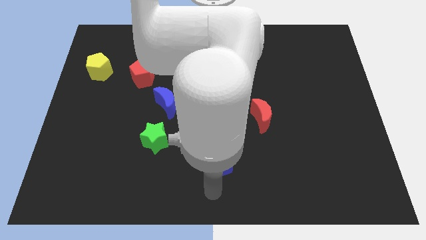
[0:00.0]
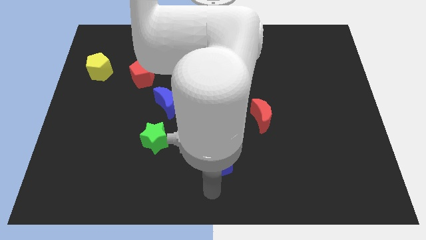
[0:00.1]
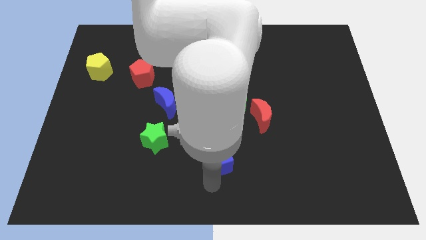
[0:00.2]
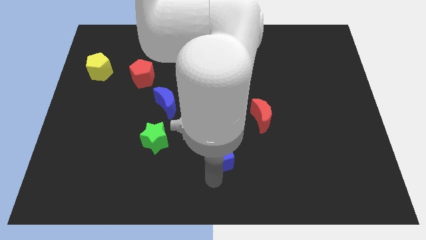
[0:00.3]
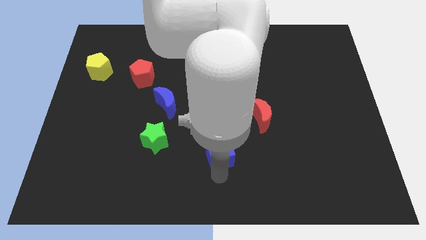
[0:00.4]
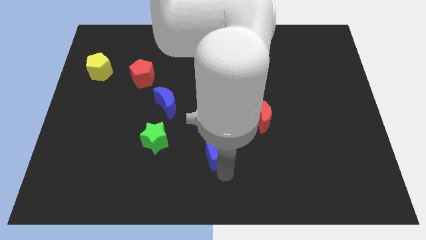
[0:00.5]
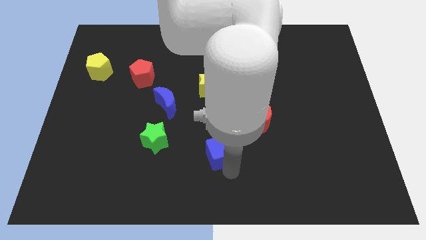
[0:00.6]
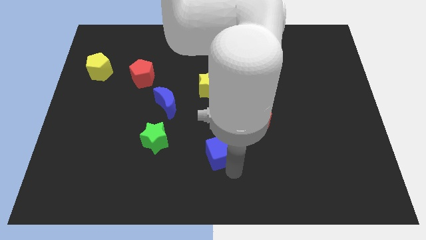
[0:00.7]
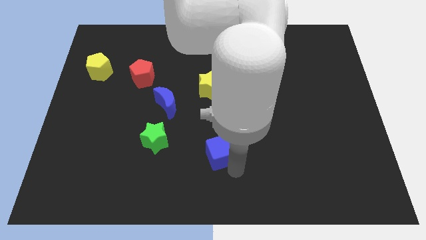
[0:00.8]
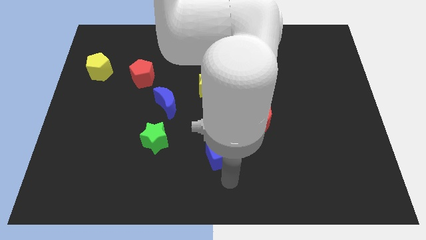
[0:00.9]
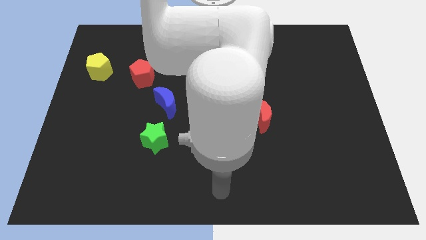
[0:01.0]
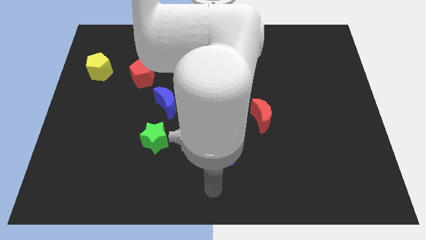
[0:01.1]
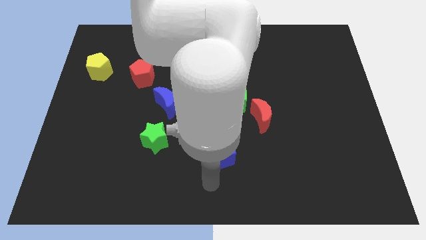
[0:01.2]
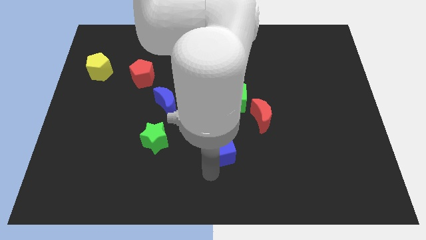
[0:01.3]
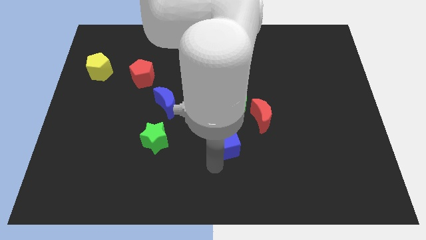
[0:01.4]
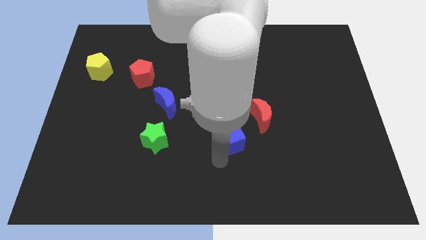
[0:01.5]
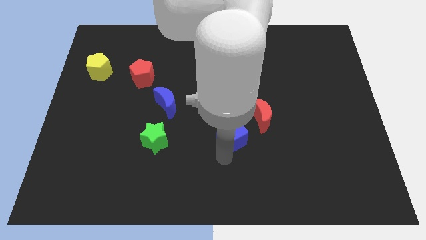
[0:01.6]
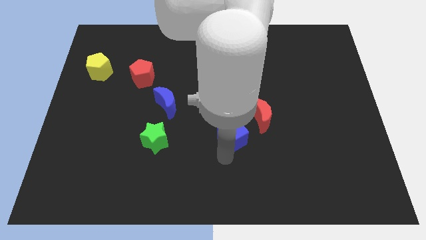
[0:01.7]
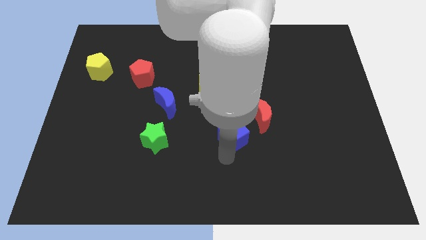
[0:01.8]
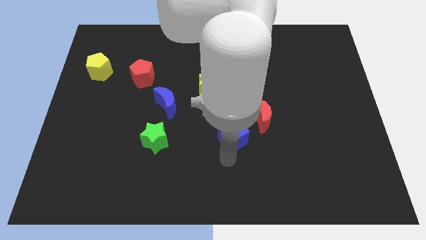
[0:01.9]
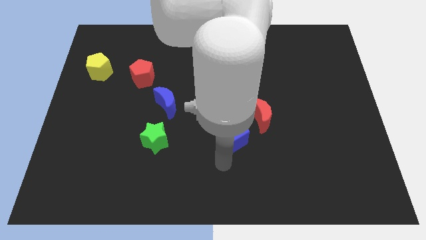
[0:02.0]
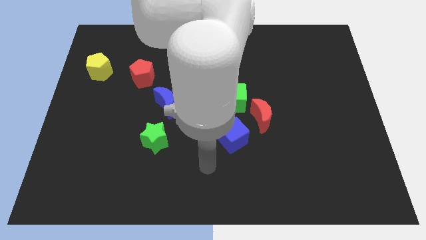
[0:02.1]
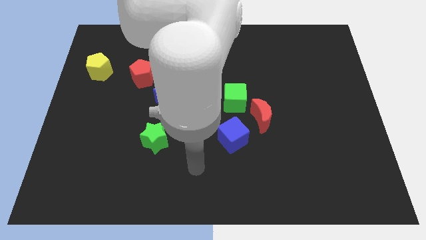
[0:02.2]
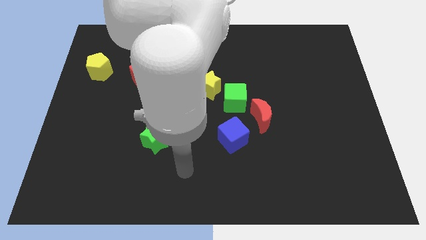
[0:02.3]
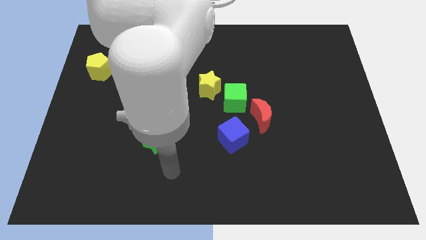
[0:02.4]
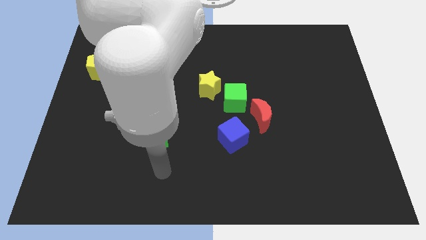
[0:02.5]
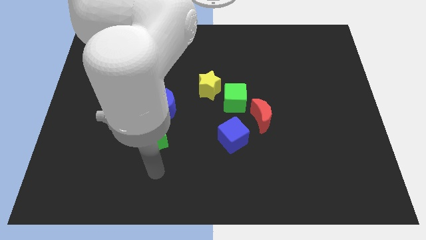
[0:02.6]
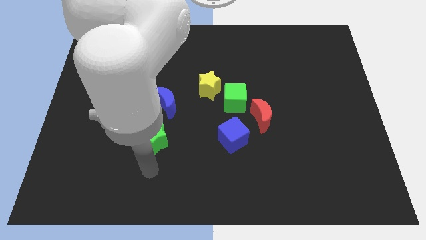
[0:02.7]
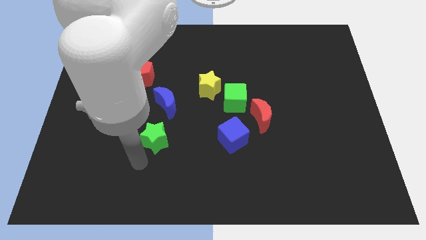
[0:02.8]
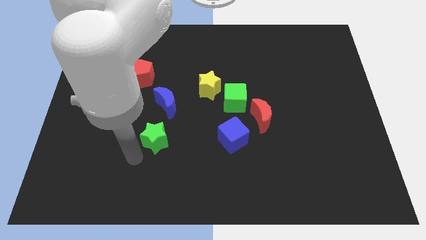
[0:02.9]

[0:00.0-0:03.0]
place blue cube vertical to green cube

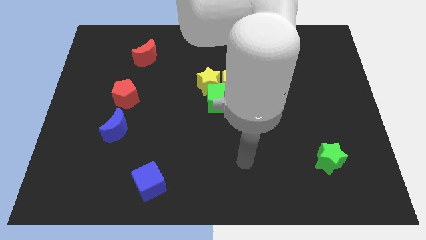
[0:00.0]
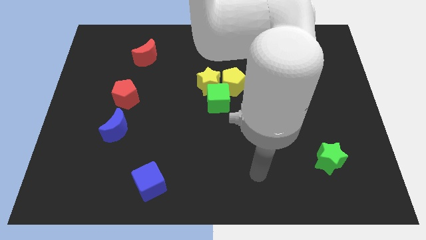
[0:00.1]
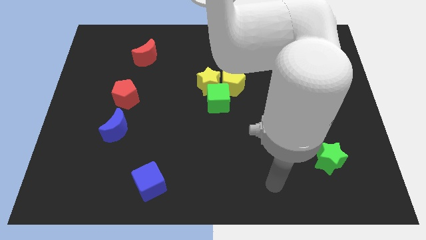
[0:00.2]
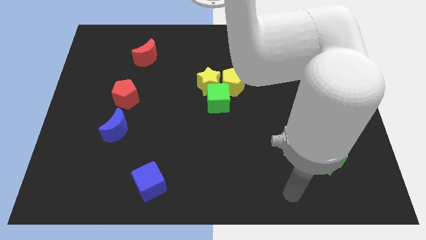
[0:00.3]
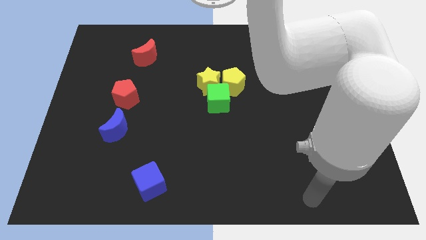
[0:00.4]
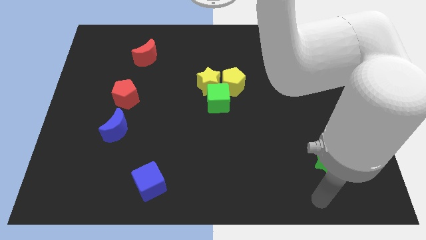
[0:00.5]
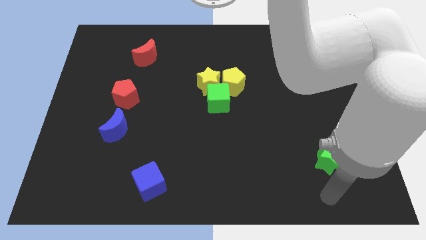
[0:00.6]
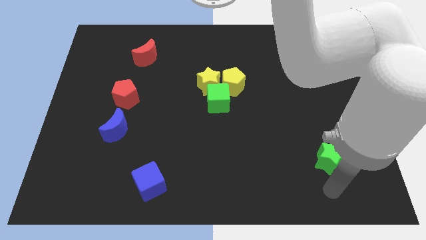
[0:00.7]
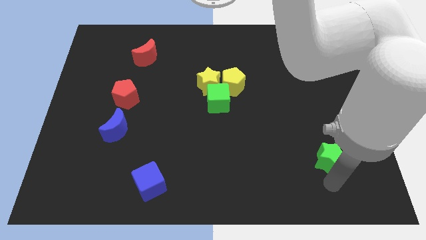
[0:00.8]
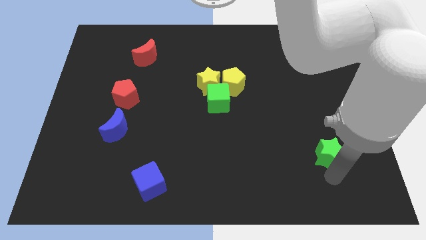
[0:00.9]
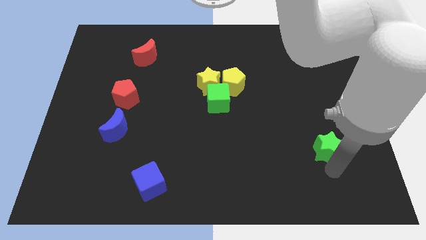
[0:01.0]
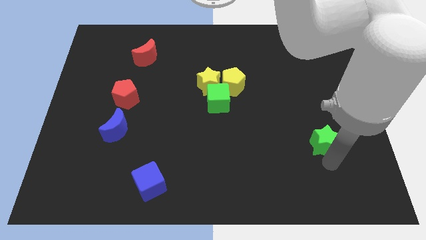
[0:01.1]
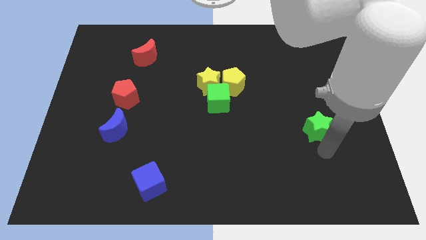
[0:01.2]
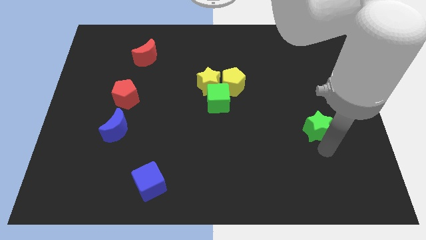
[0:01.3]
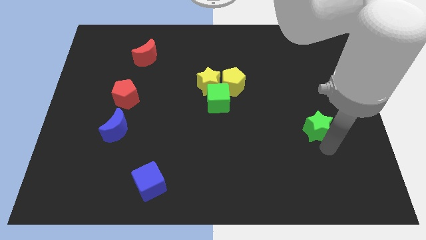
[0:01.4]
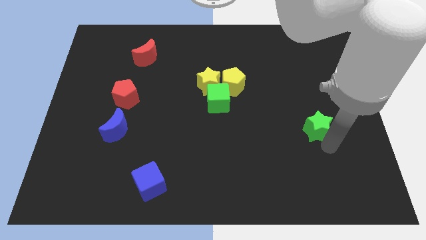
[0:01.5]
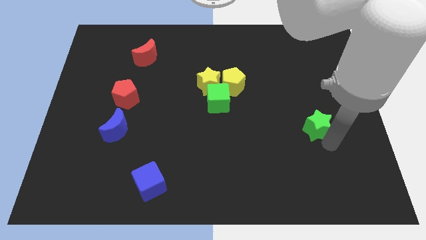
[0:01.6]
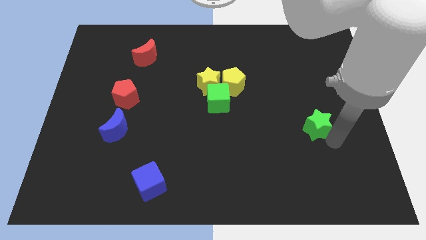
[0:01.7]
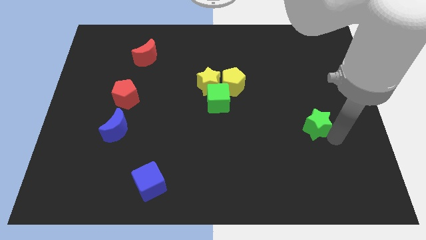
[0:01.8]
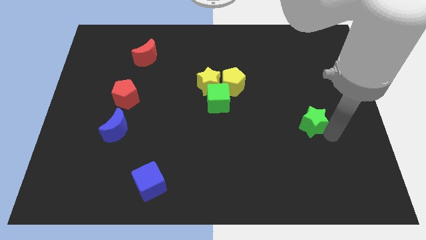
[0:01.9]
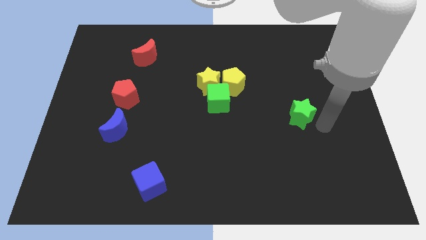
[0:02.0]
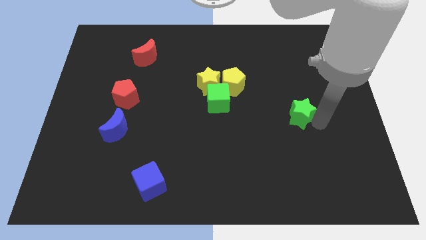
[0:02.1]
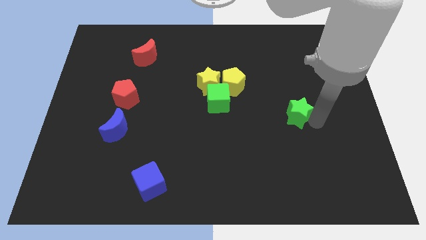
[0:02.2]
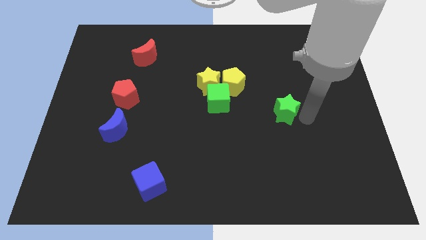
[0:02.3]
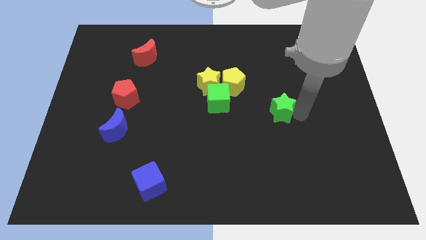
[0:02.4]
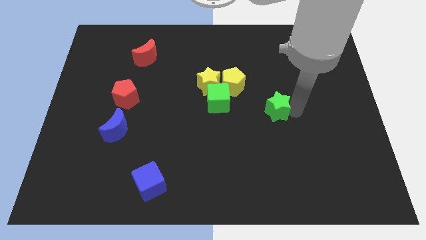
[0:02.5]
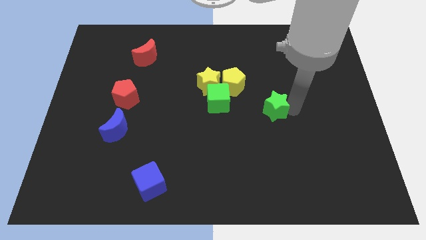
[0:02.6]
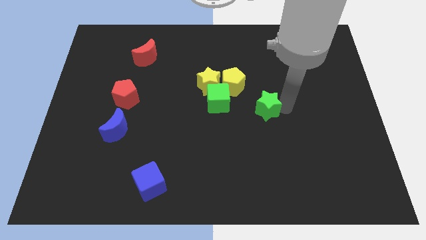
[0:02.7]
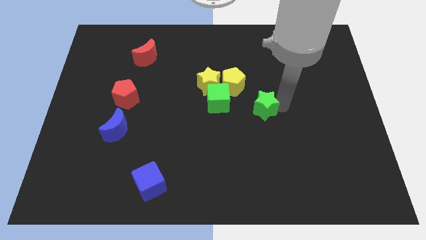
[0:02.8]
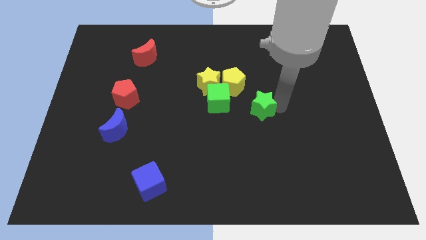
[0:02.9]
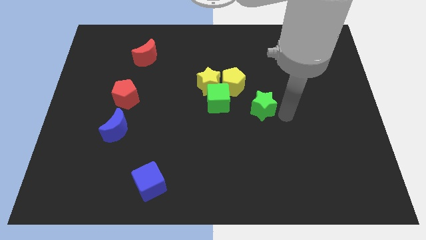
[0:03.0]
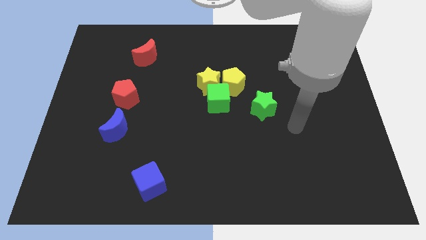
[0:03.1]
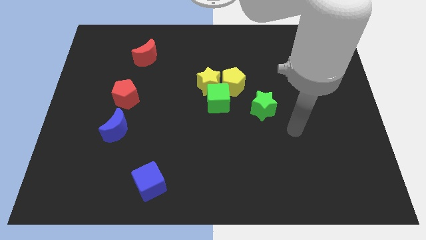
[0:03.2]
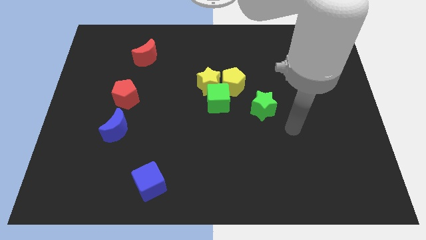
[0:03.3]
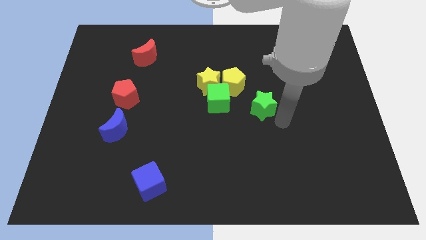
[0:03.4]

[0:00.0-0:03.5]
move the green star towards the group of blocks

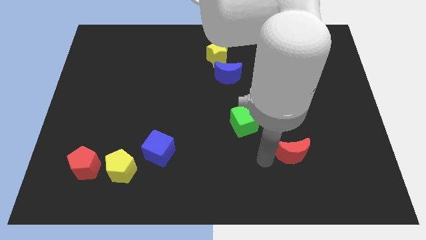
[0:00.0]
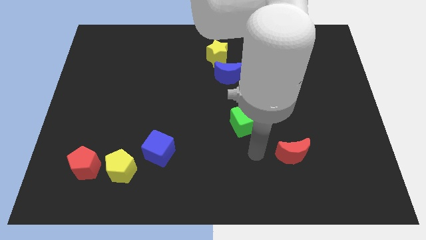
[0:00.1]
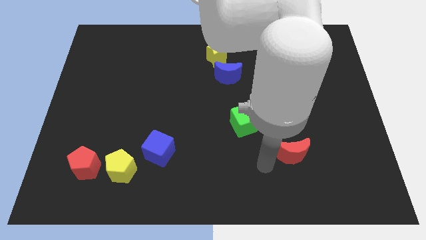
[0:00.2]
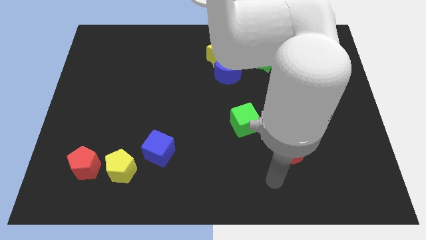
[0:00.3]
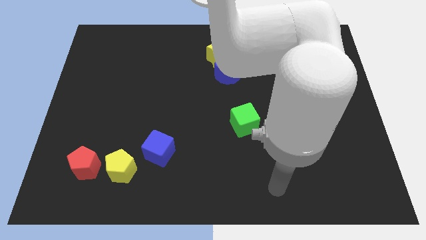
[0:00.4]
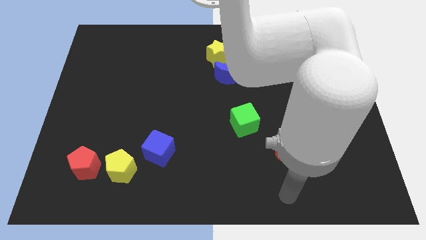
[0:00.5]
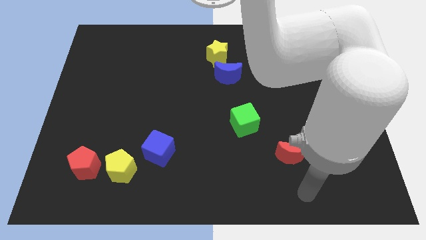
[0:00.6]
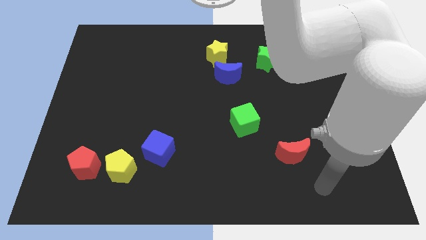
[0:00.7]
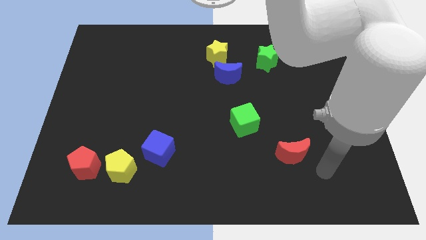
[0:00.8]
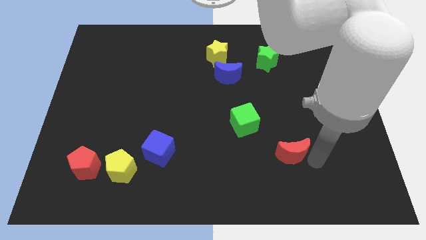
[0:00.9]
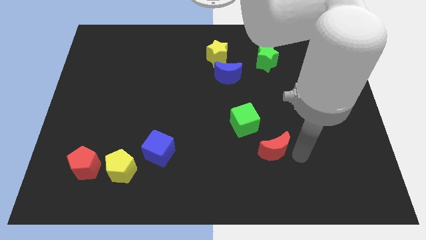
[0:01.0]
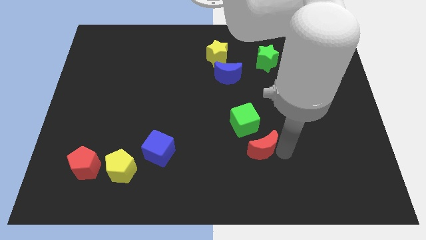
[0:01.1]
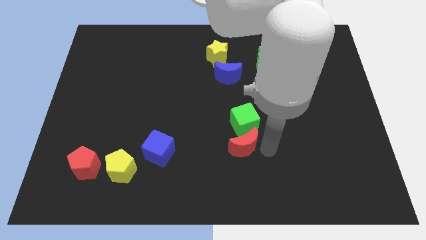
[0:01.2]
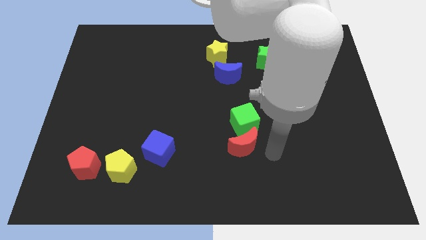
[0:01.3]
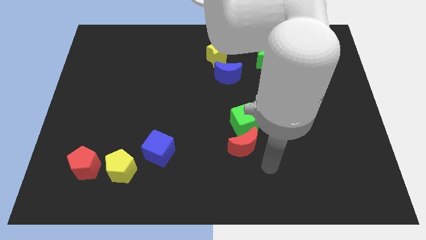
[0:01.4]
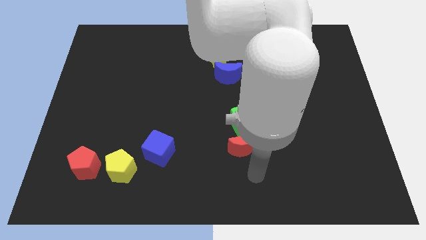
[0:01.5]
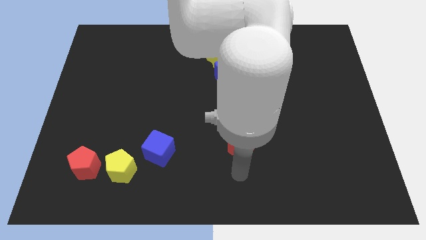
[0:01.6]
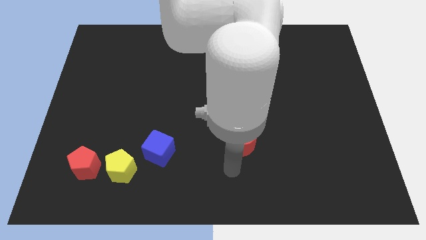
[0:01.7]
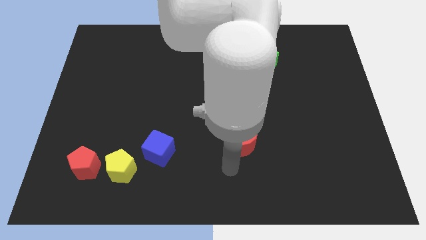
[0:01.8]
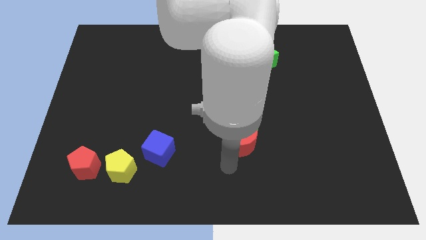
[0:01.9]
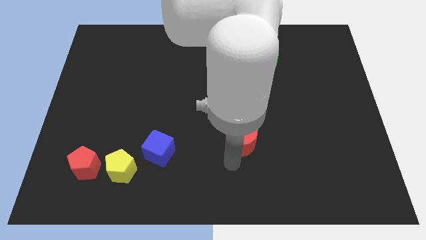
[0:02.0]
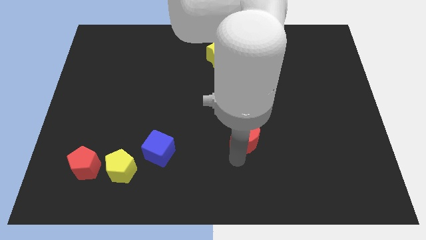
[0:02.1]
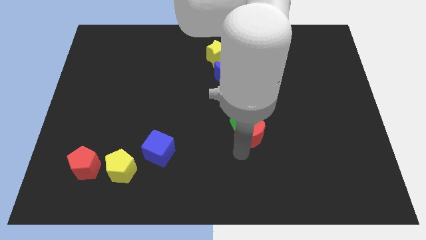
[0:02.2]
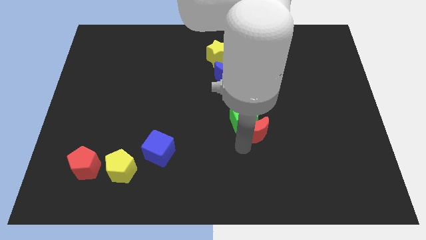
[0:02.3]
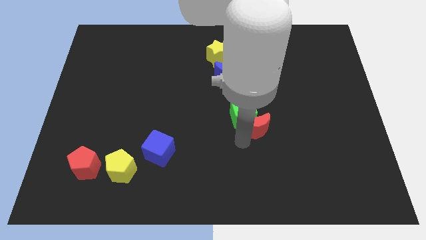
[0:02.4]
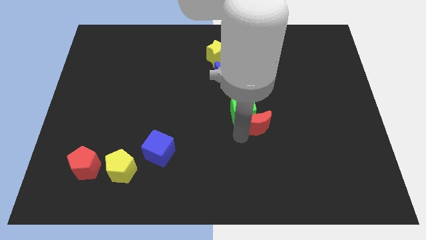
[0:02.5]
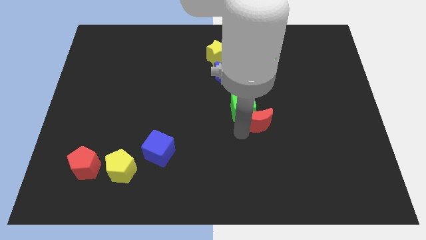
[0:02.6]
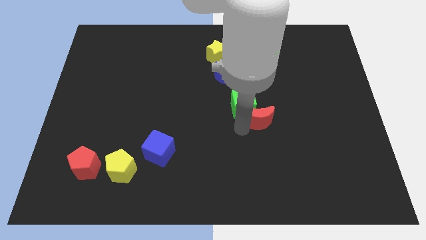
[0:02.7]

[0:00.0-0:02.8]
push the green cube with red crescent
